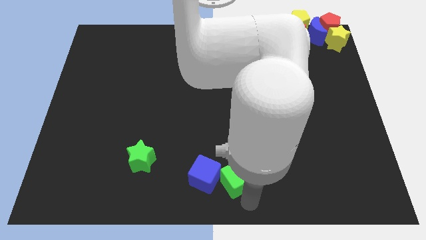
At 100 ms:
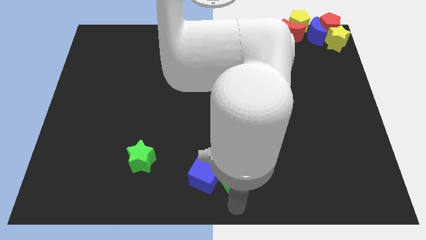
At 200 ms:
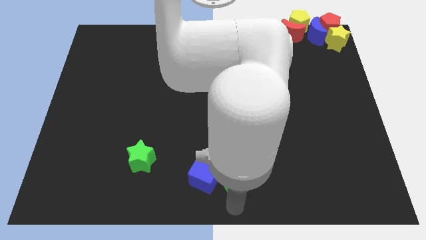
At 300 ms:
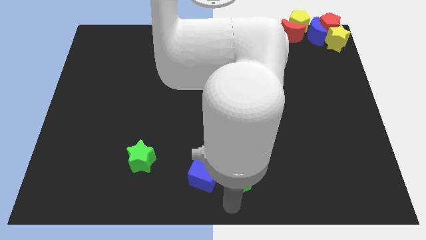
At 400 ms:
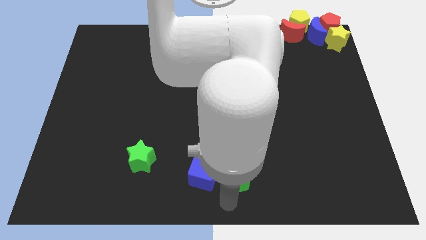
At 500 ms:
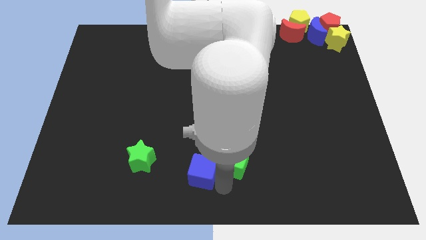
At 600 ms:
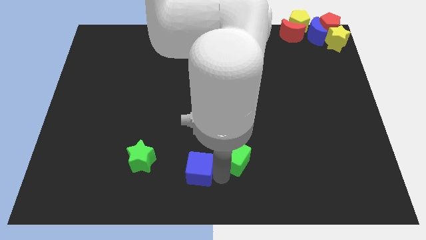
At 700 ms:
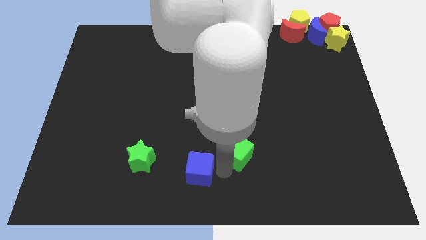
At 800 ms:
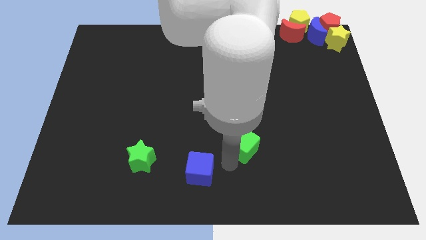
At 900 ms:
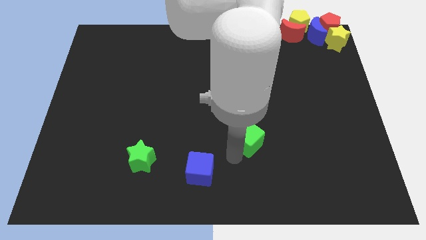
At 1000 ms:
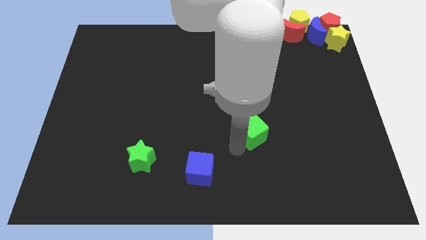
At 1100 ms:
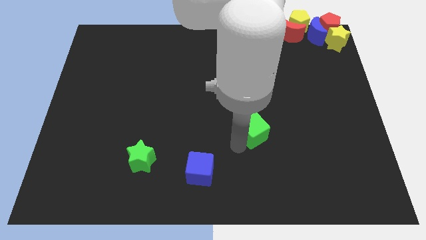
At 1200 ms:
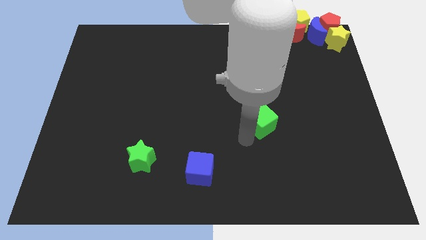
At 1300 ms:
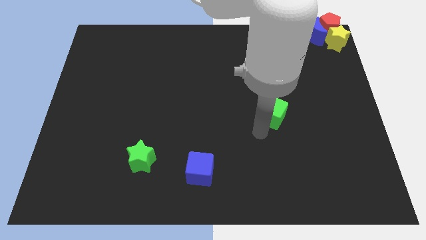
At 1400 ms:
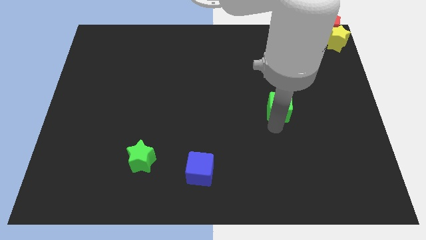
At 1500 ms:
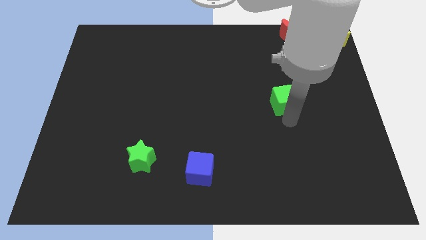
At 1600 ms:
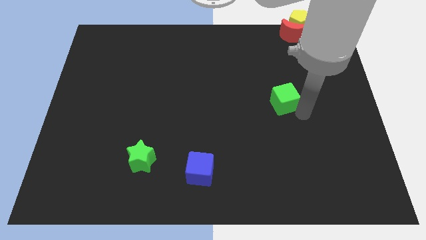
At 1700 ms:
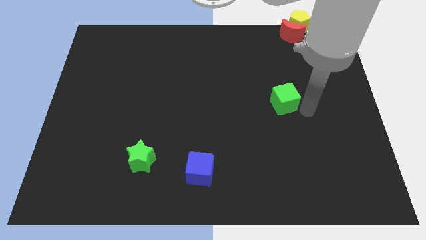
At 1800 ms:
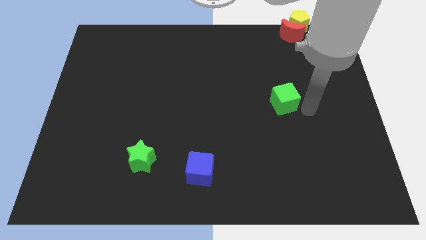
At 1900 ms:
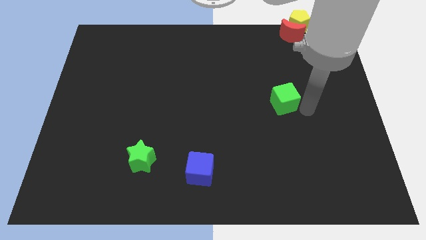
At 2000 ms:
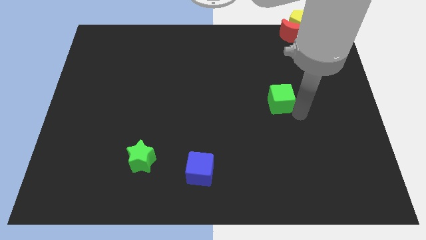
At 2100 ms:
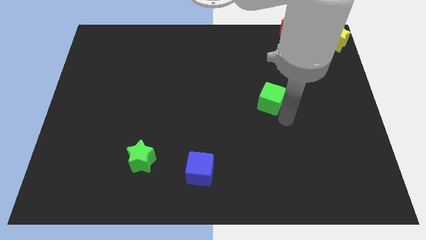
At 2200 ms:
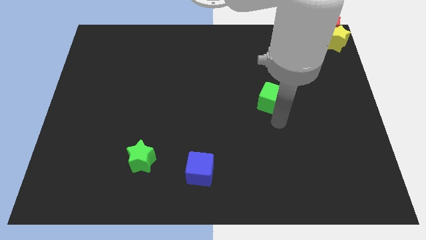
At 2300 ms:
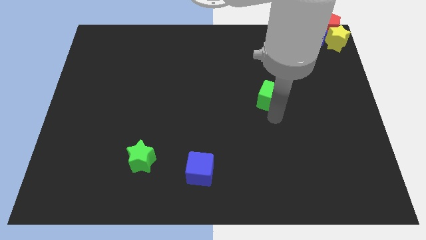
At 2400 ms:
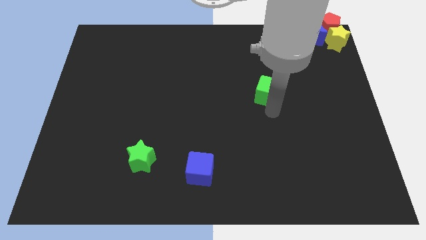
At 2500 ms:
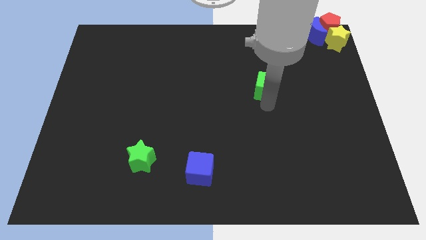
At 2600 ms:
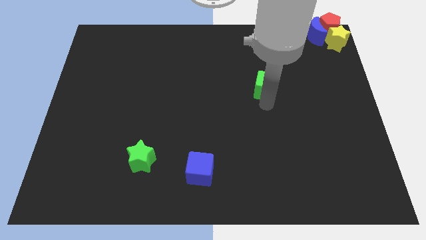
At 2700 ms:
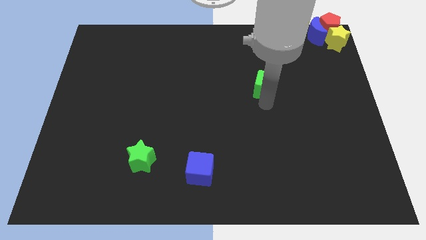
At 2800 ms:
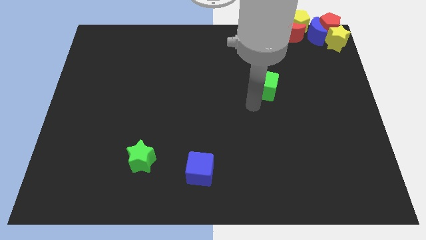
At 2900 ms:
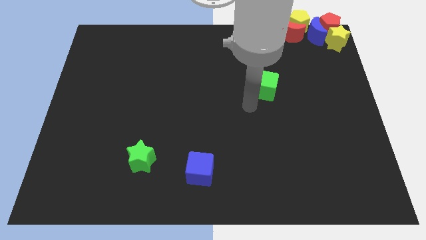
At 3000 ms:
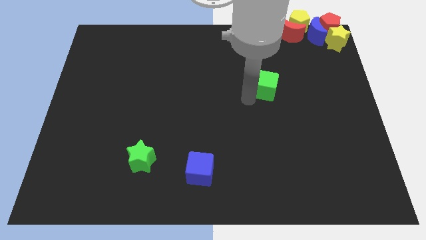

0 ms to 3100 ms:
separate green cube from blue cube

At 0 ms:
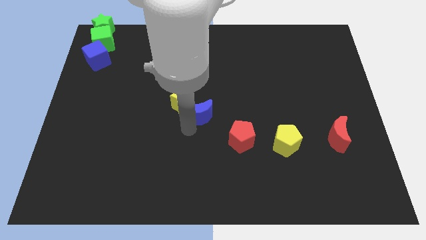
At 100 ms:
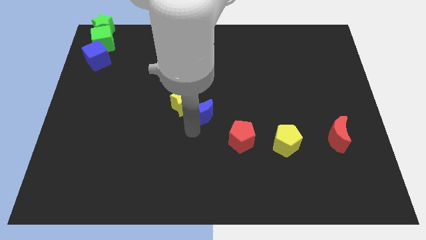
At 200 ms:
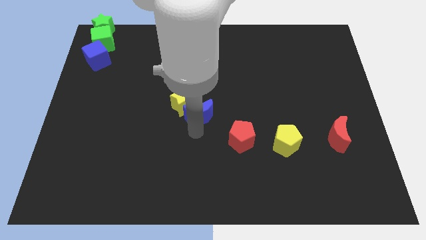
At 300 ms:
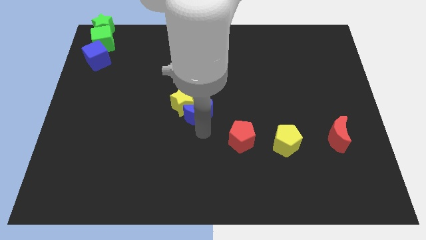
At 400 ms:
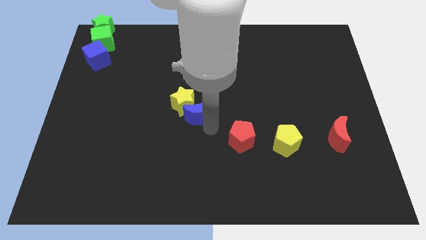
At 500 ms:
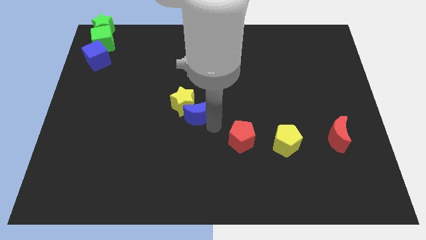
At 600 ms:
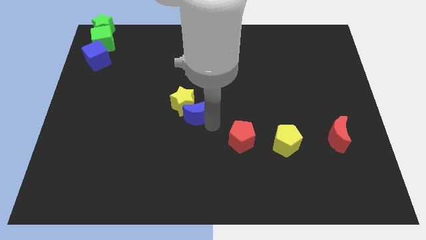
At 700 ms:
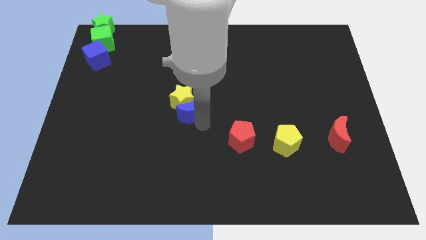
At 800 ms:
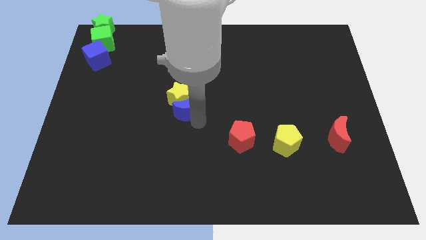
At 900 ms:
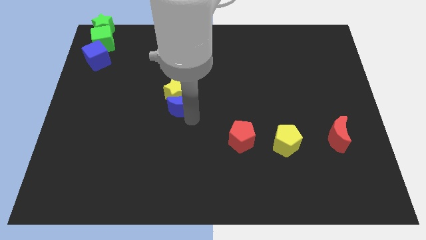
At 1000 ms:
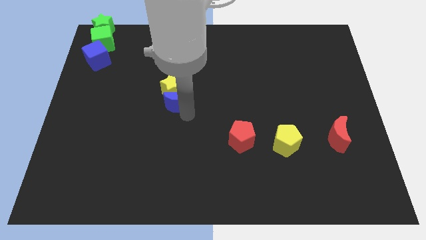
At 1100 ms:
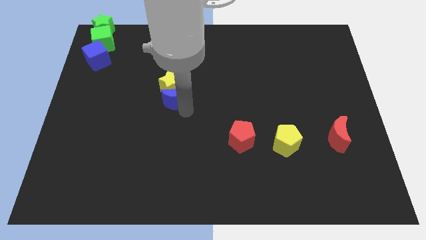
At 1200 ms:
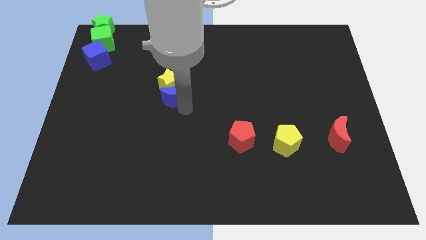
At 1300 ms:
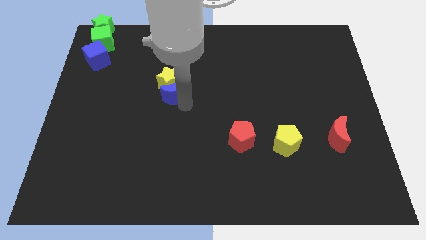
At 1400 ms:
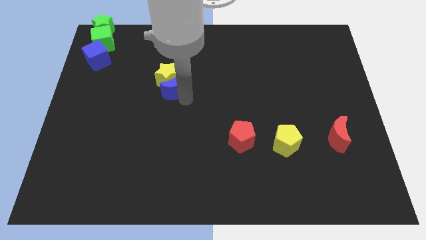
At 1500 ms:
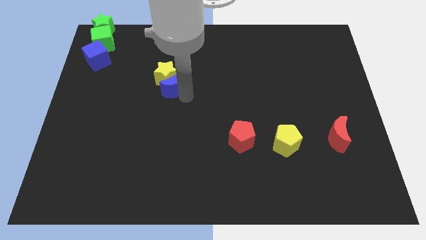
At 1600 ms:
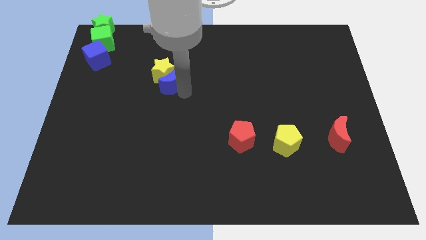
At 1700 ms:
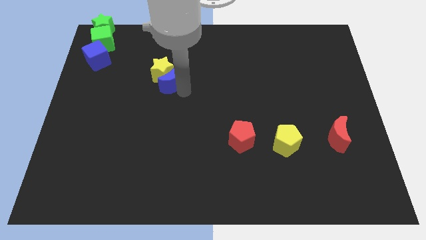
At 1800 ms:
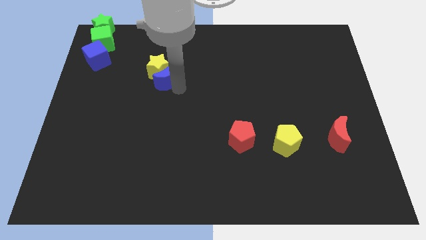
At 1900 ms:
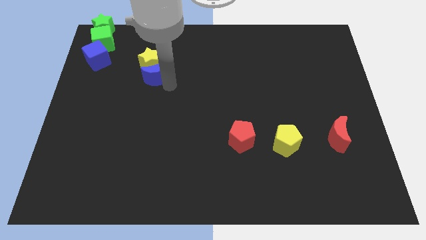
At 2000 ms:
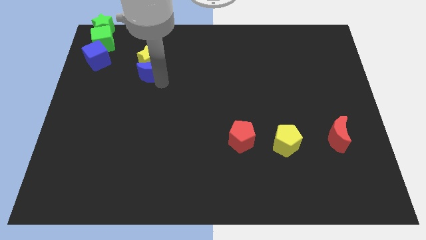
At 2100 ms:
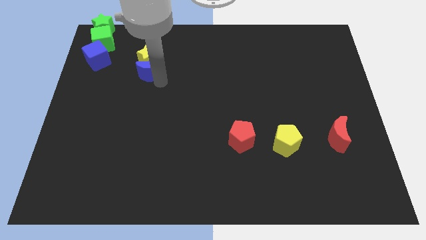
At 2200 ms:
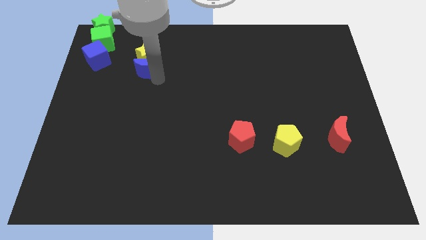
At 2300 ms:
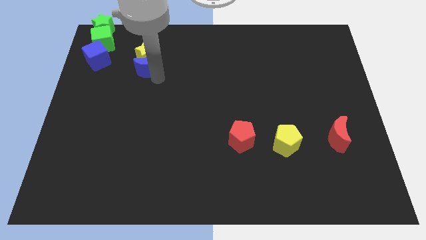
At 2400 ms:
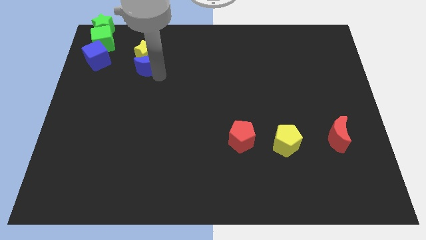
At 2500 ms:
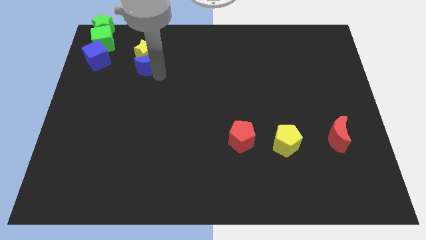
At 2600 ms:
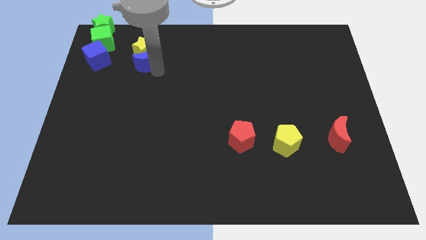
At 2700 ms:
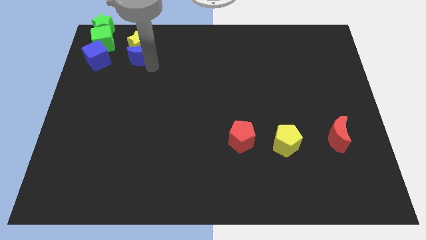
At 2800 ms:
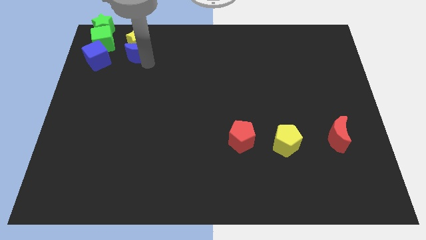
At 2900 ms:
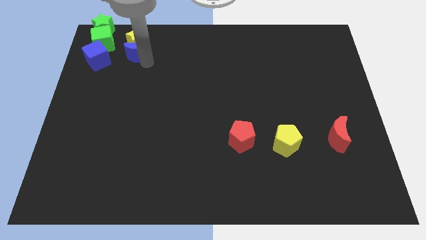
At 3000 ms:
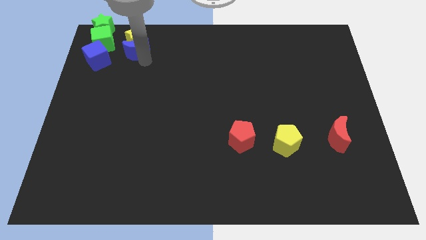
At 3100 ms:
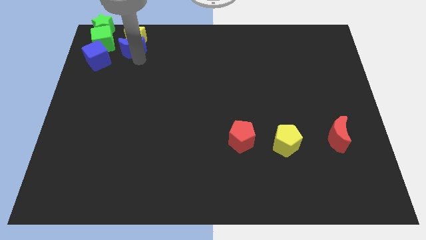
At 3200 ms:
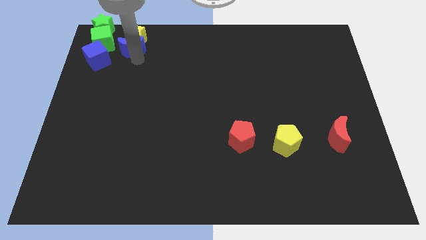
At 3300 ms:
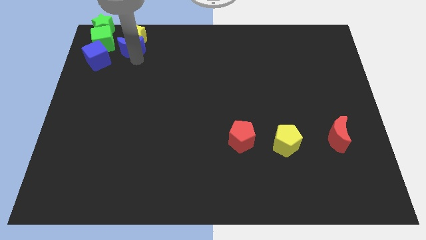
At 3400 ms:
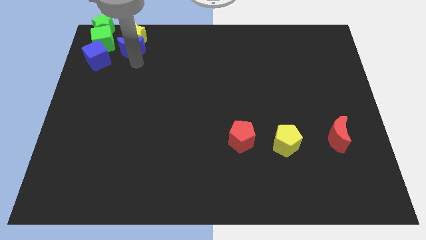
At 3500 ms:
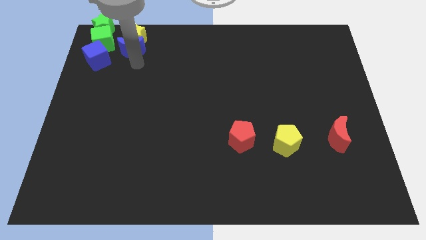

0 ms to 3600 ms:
move the blue moon and yellow star towards green blocks

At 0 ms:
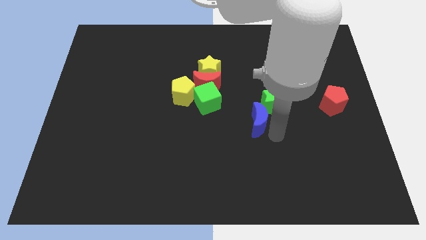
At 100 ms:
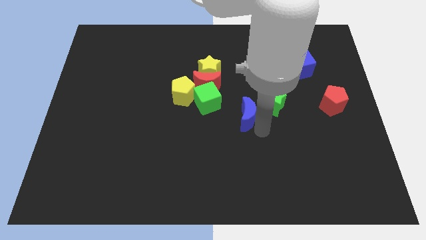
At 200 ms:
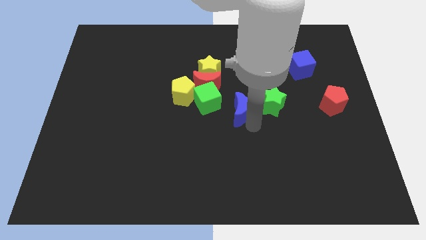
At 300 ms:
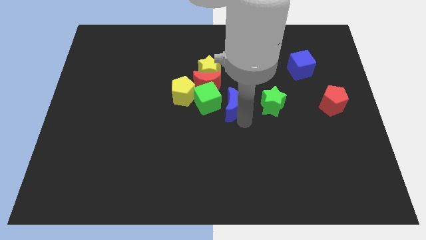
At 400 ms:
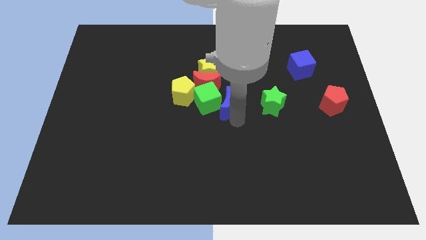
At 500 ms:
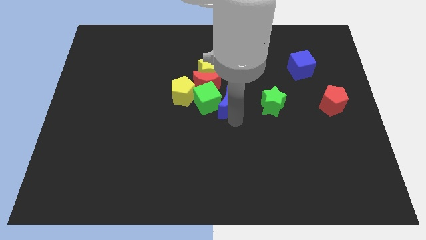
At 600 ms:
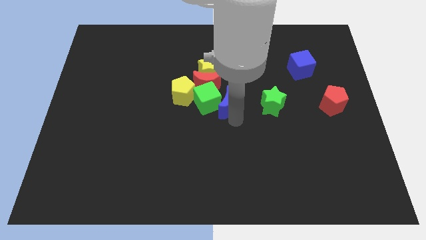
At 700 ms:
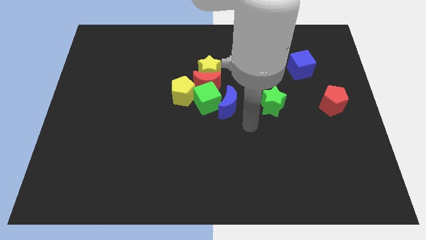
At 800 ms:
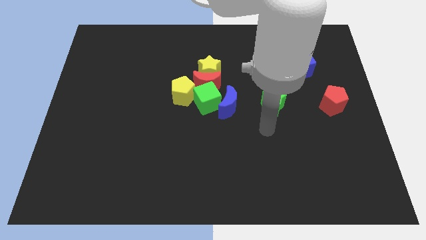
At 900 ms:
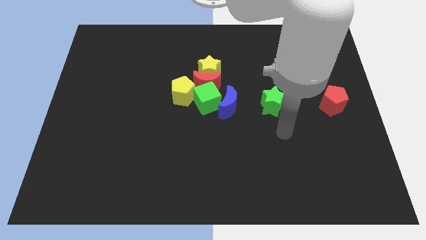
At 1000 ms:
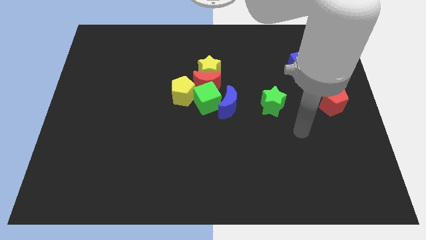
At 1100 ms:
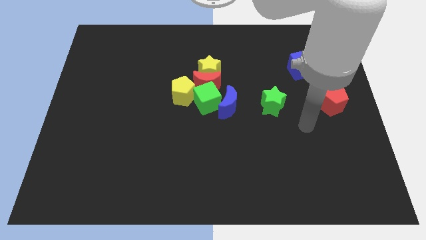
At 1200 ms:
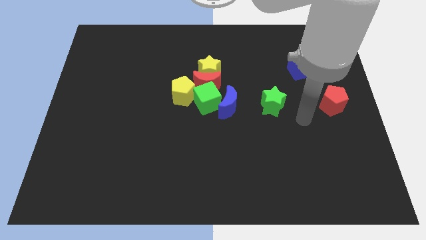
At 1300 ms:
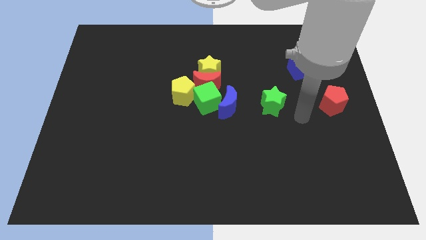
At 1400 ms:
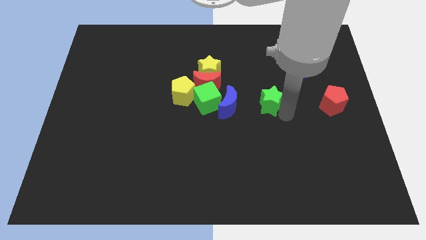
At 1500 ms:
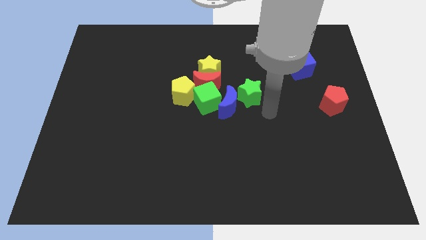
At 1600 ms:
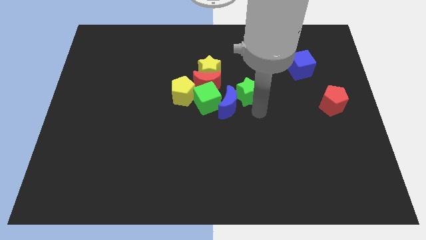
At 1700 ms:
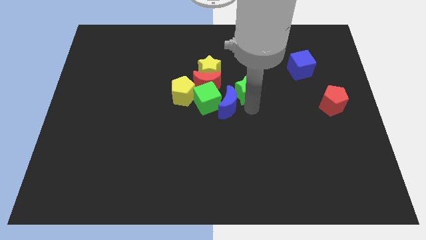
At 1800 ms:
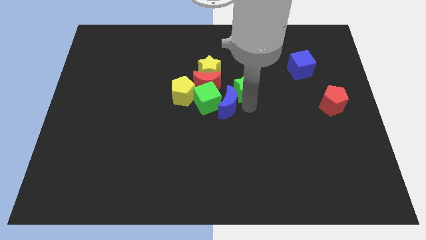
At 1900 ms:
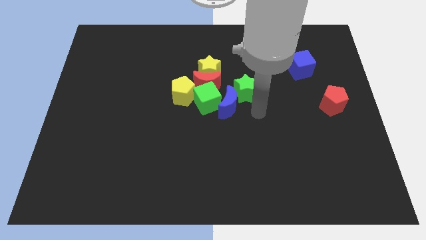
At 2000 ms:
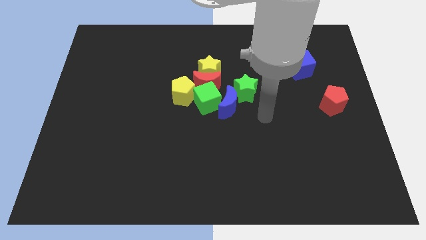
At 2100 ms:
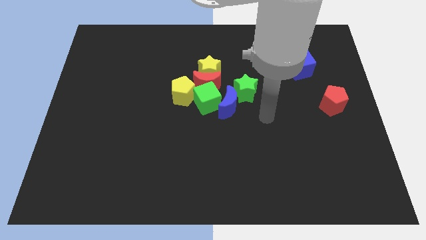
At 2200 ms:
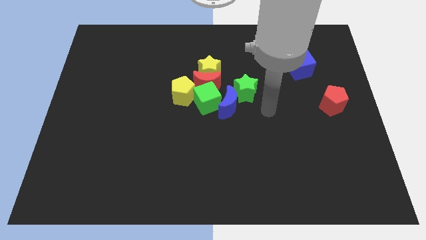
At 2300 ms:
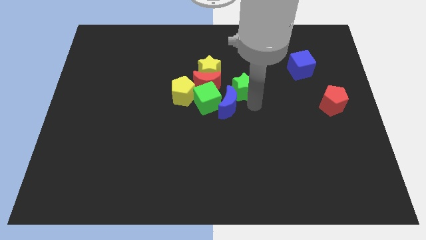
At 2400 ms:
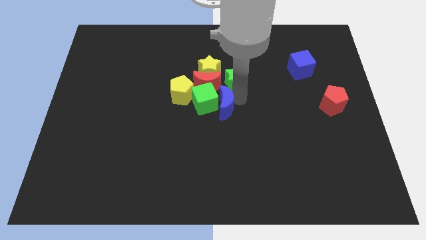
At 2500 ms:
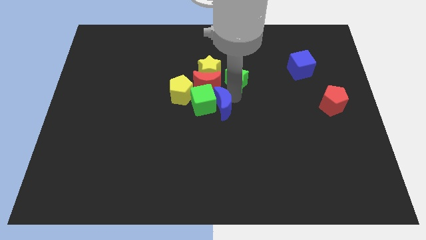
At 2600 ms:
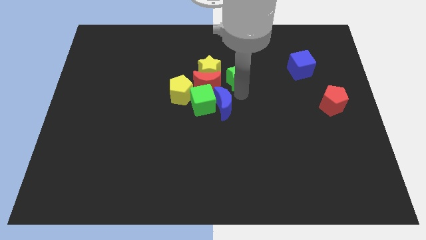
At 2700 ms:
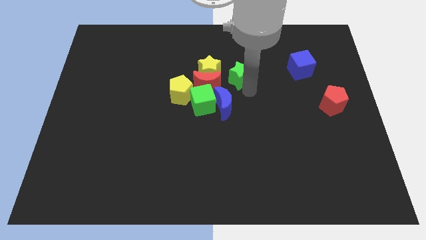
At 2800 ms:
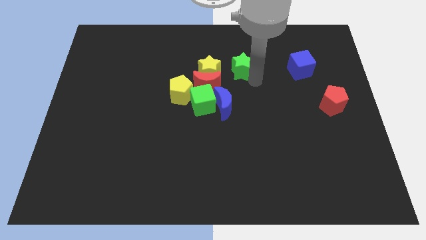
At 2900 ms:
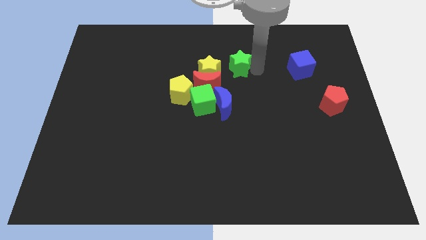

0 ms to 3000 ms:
push green star beside yellow star
